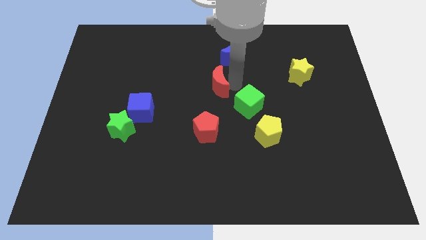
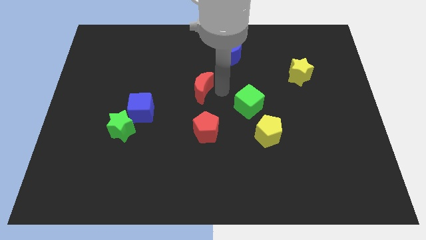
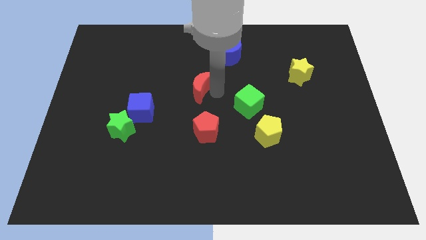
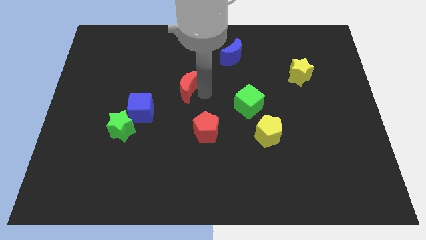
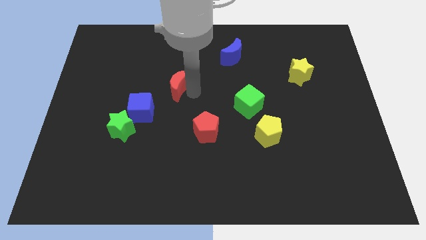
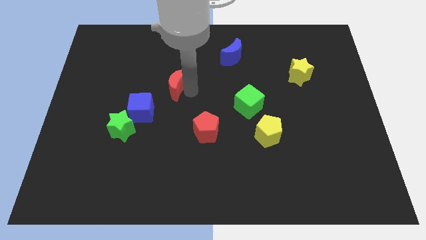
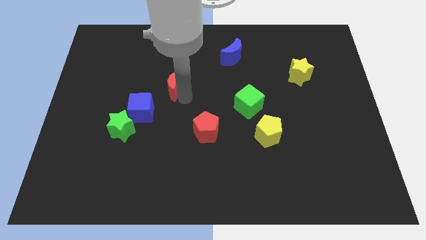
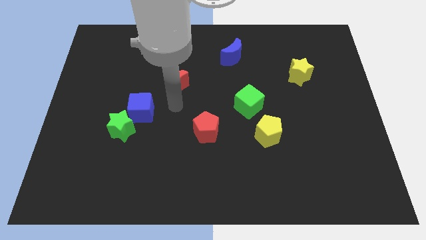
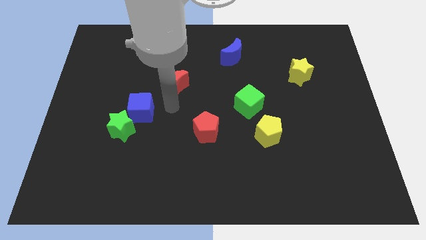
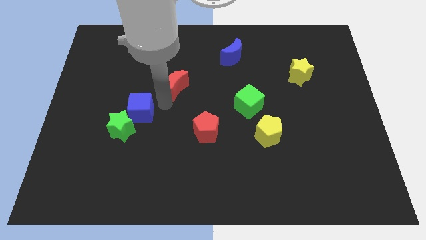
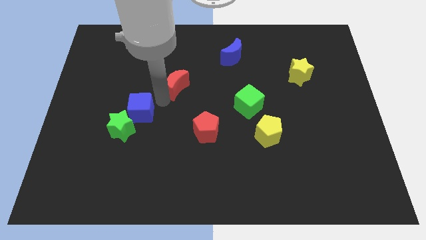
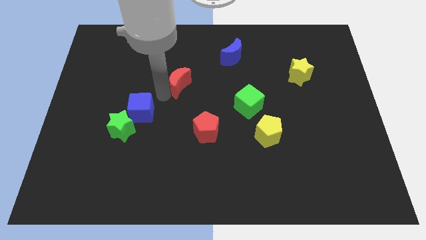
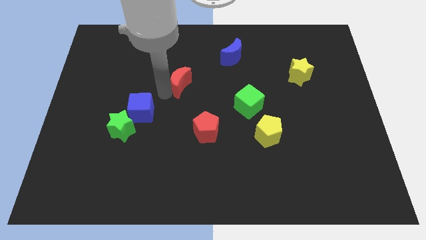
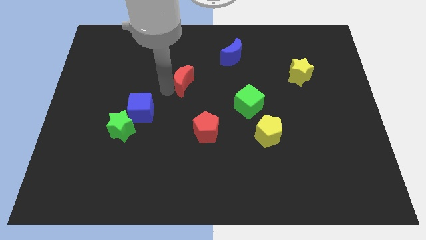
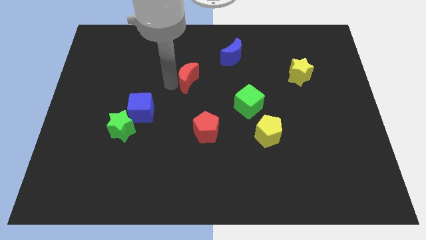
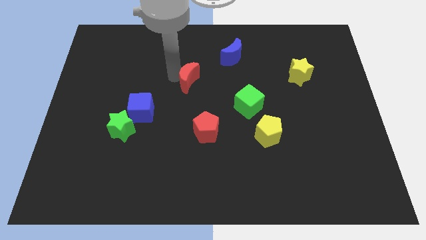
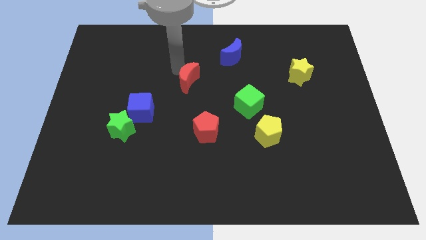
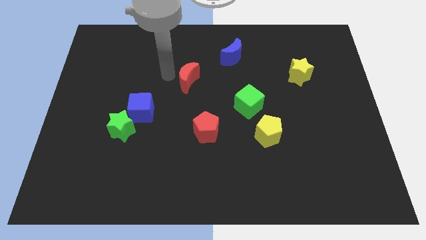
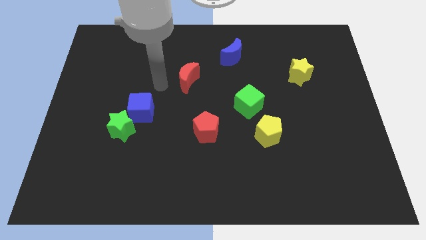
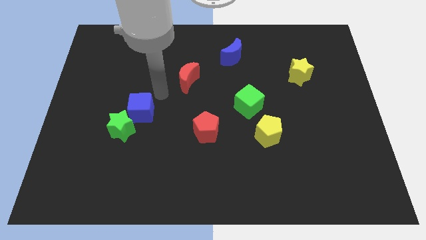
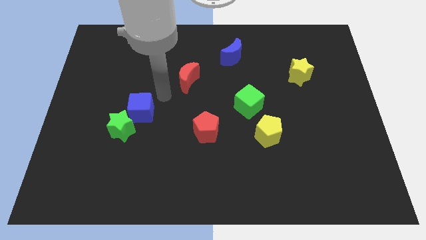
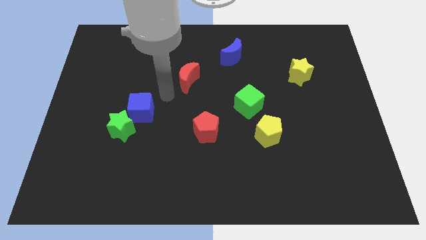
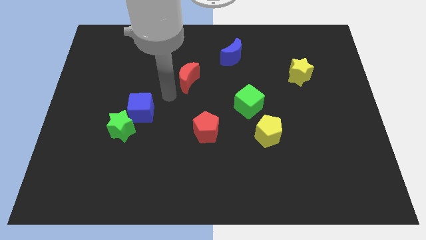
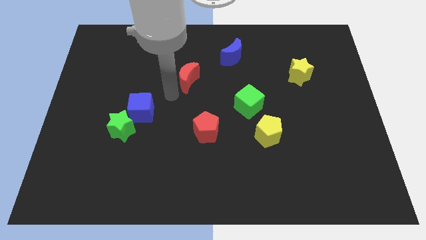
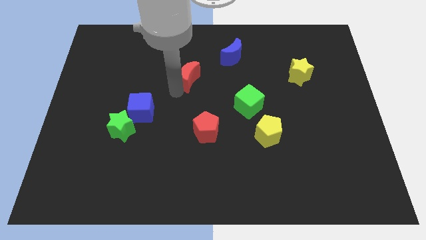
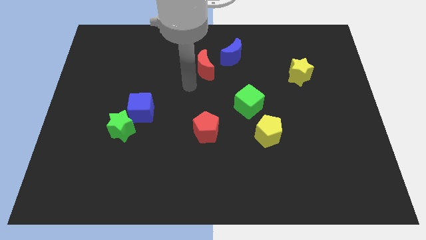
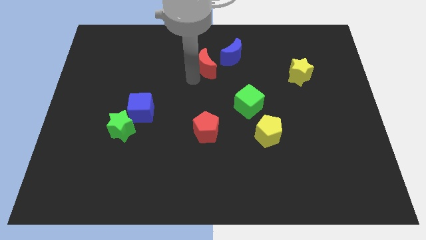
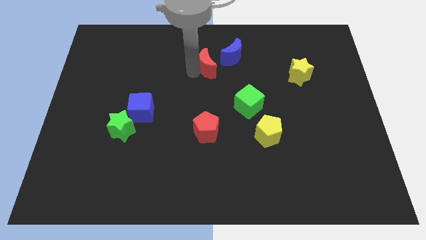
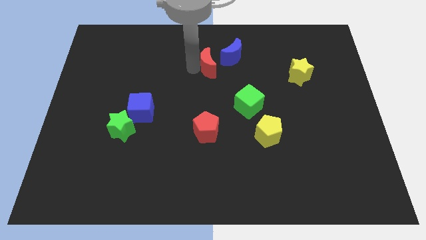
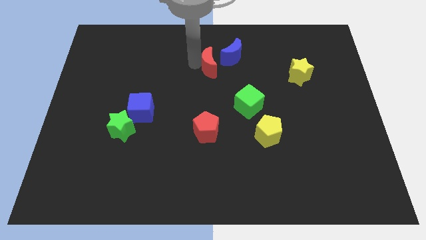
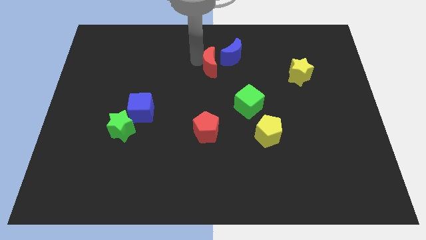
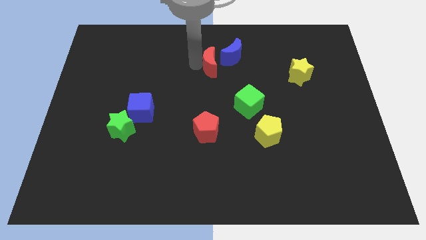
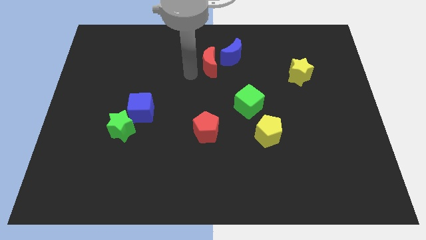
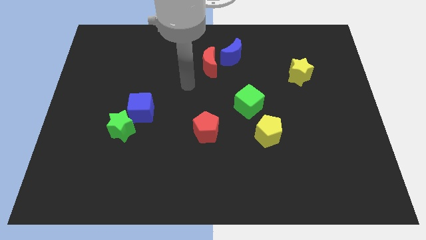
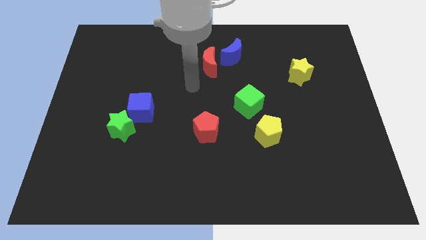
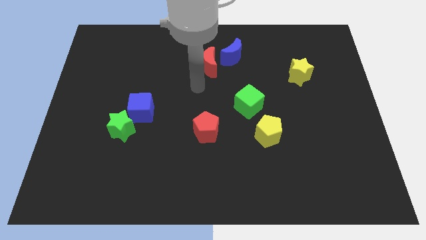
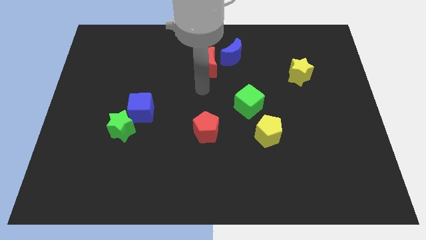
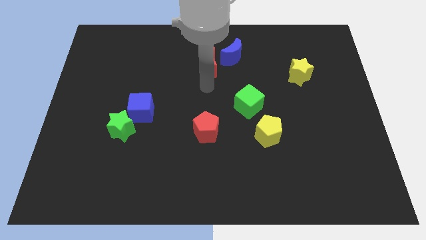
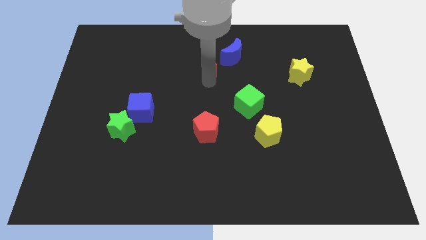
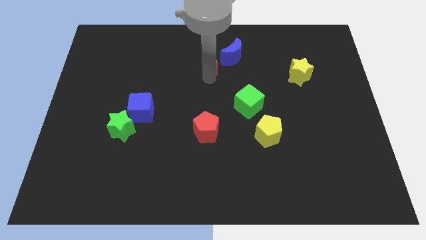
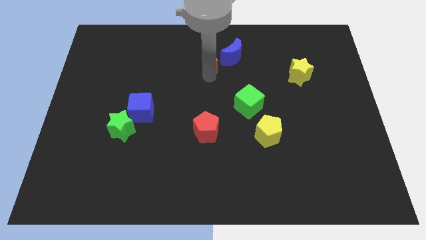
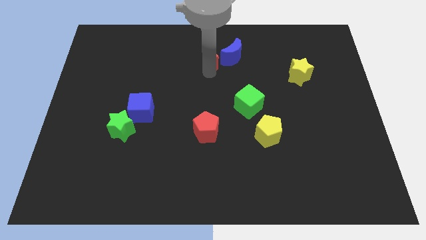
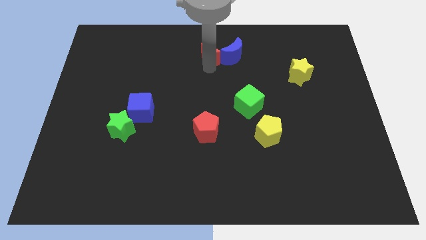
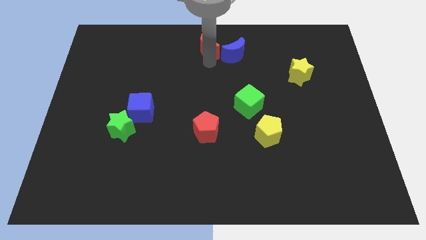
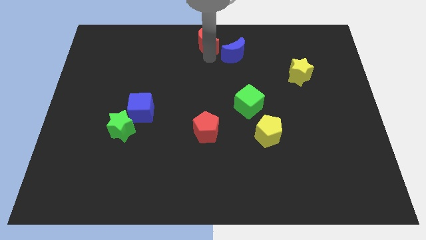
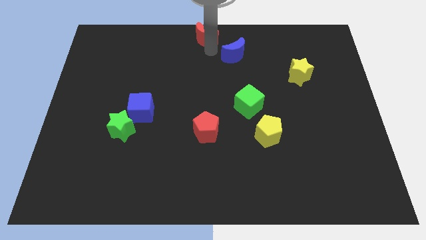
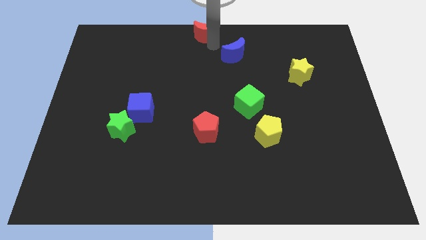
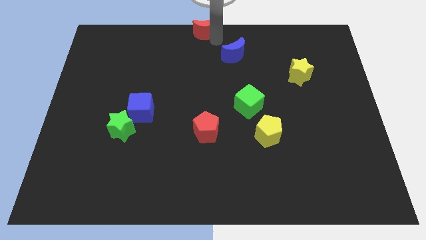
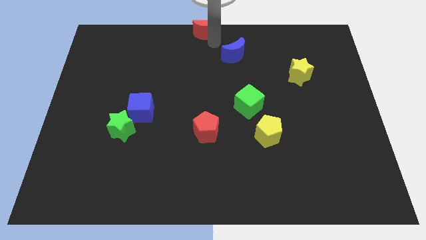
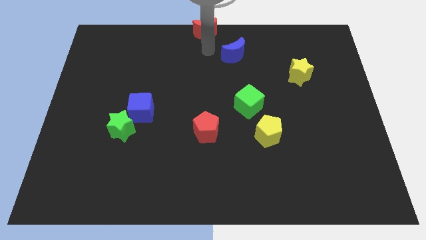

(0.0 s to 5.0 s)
push the red moon to the top center

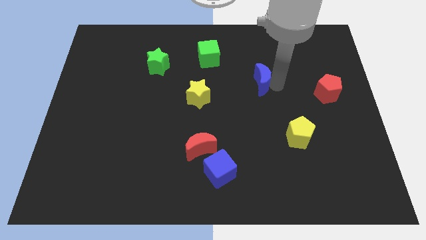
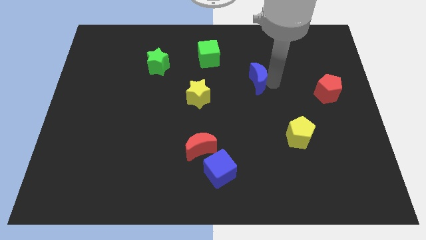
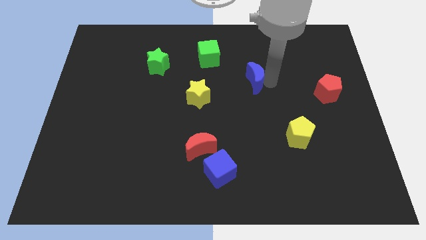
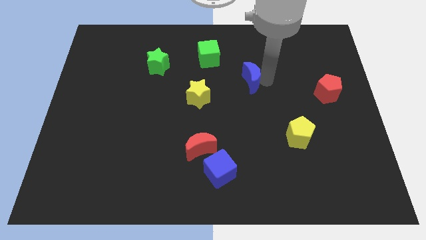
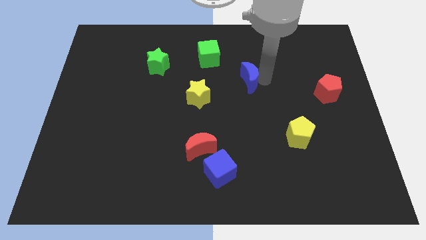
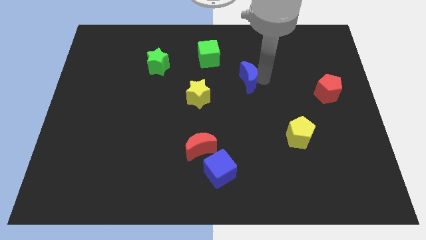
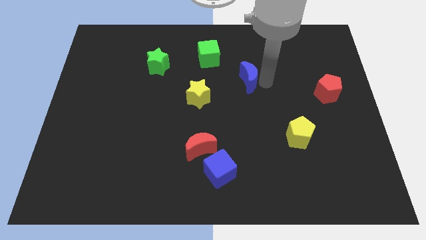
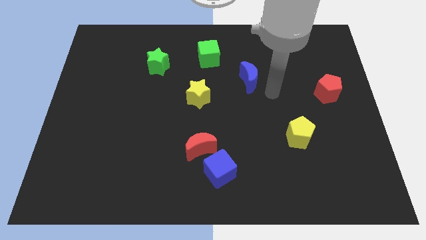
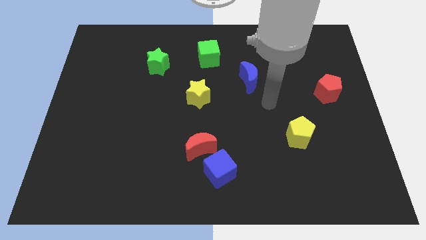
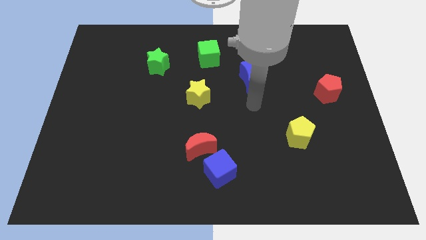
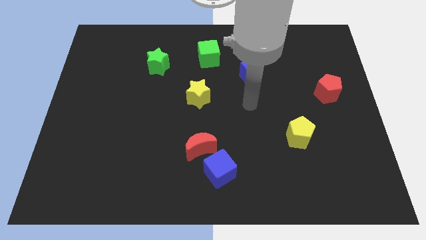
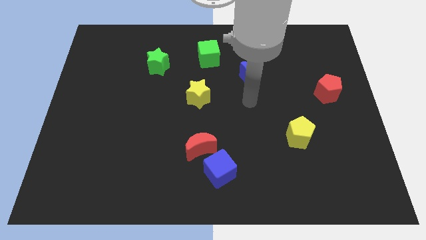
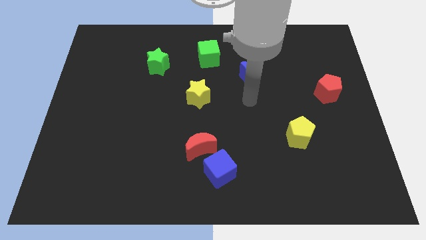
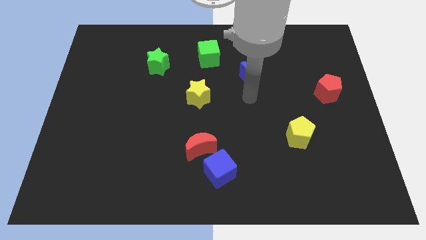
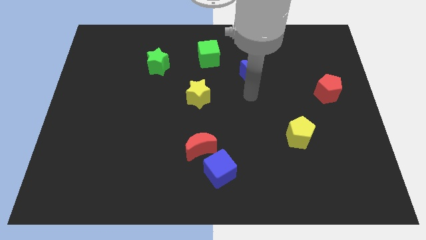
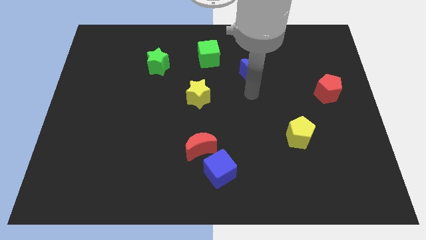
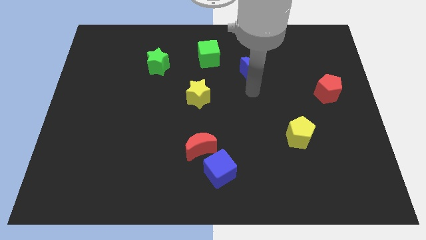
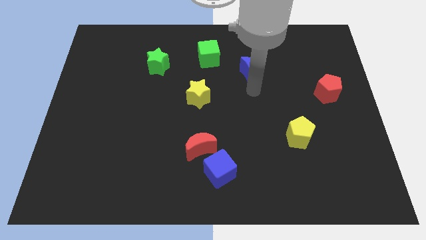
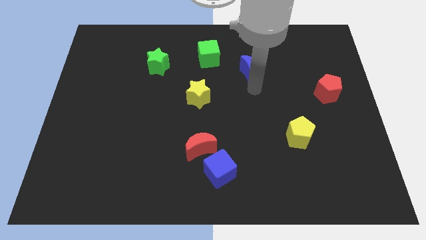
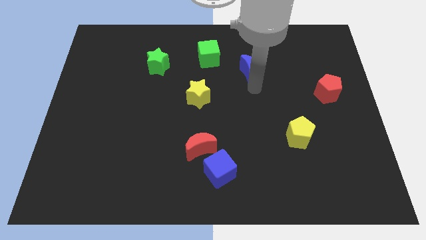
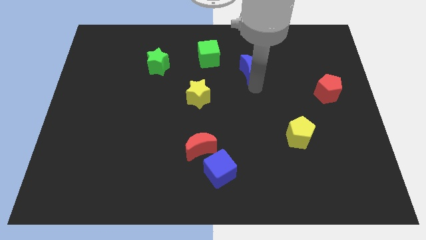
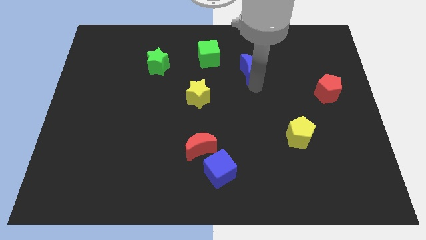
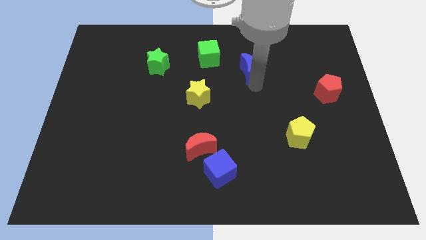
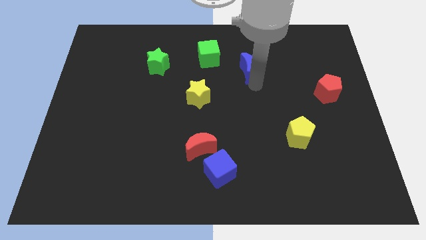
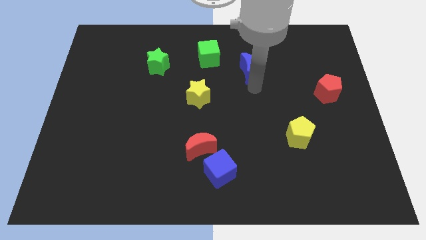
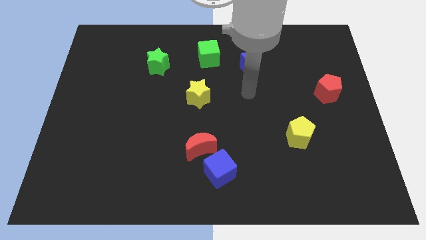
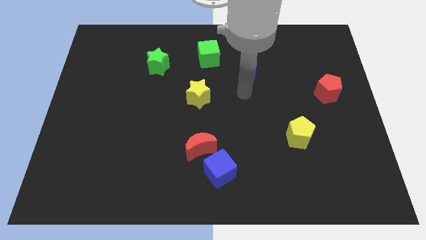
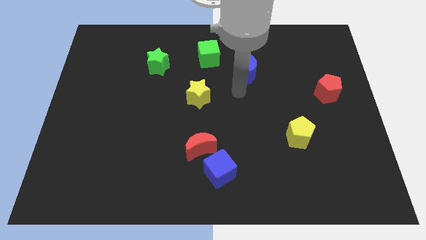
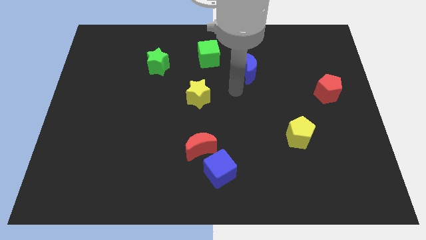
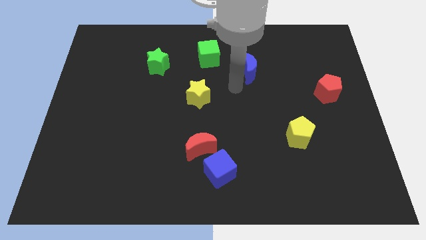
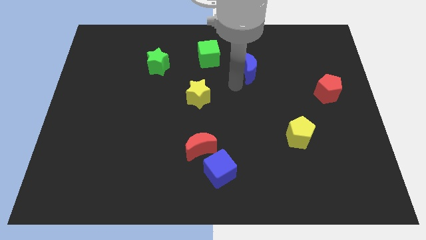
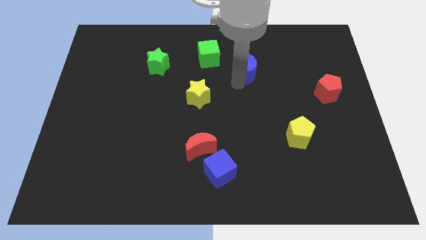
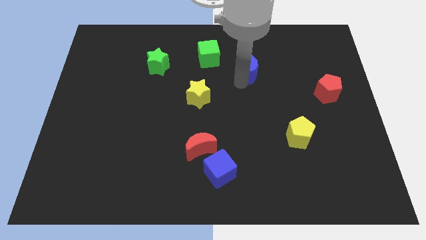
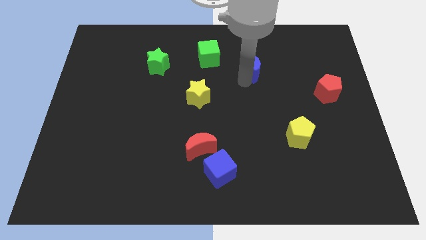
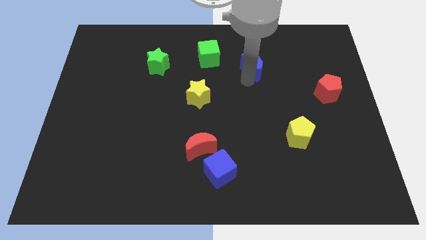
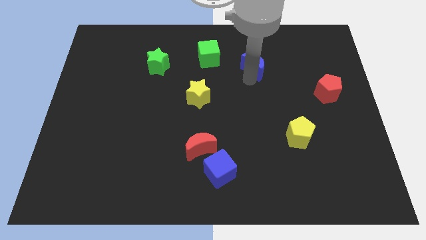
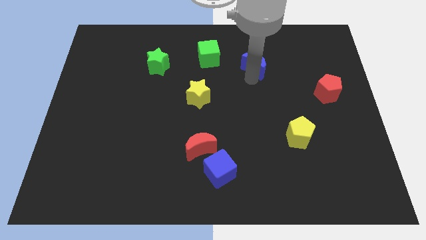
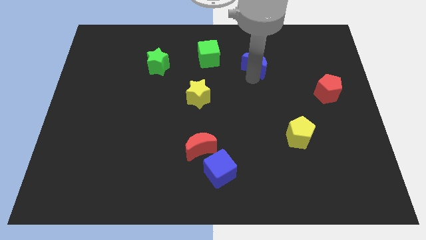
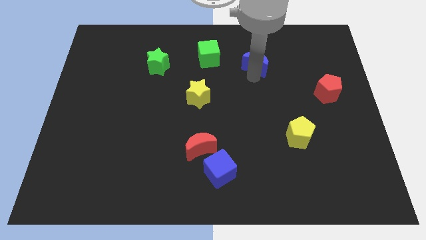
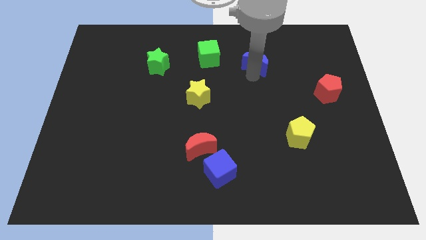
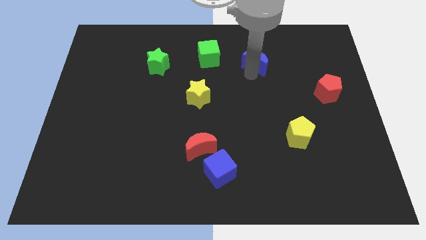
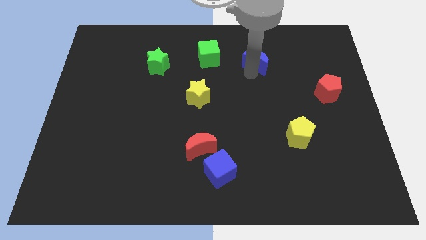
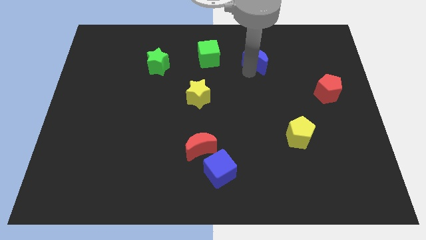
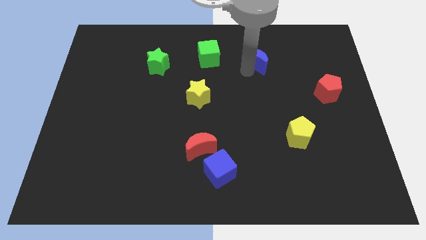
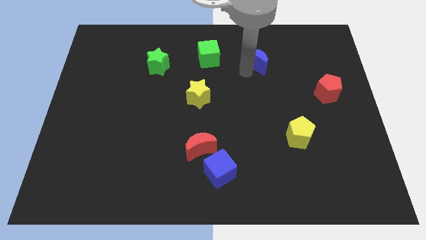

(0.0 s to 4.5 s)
push the blue crescent to the right of the green cube
